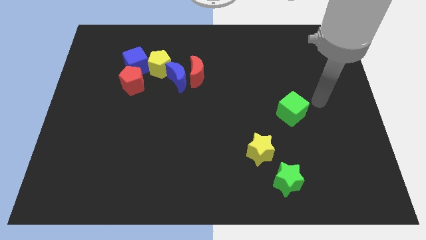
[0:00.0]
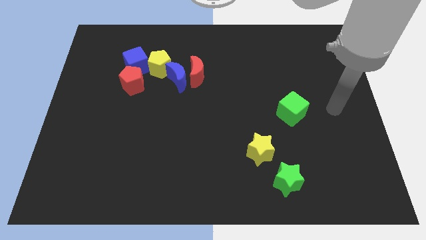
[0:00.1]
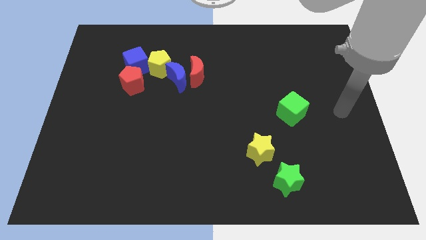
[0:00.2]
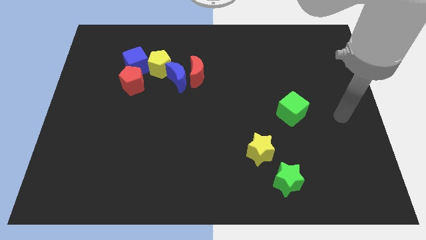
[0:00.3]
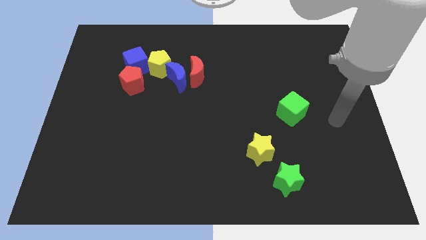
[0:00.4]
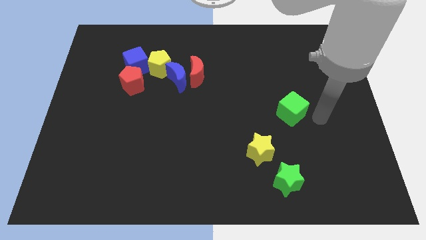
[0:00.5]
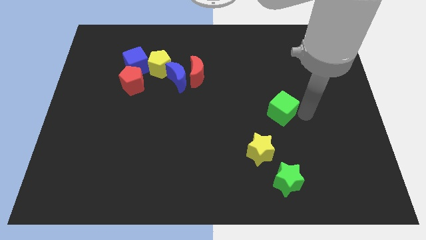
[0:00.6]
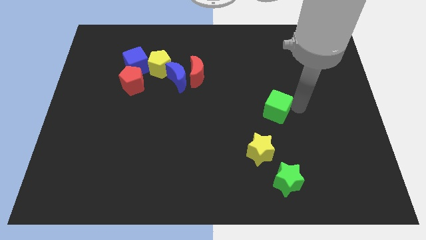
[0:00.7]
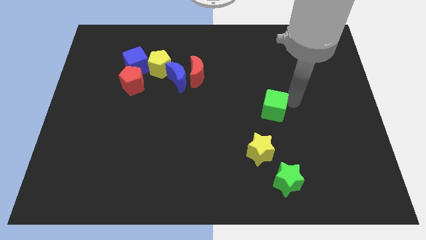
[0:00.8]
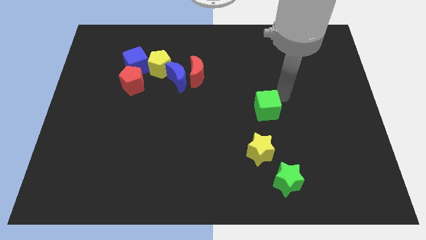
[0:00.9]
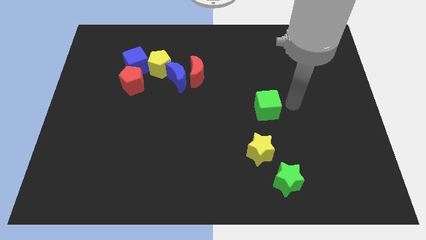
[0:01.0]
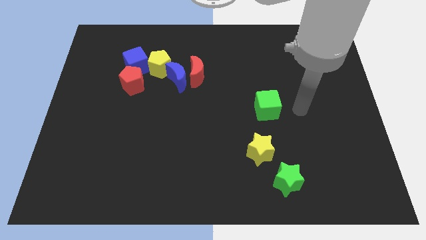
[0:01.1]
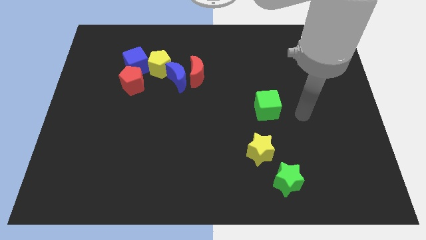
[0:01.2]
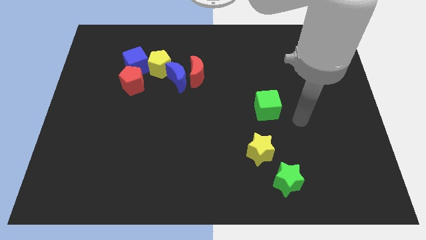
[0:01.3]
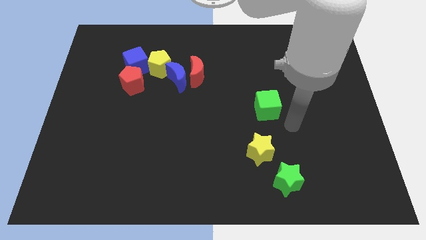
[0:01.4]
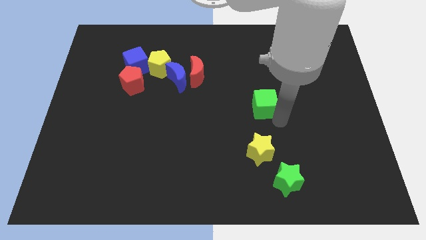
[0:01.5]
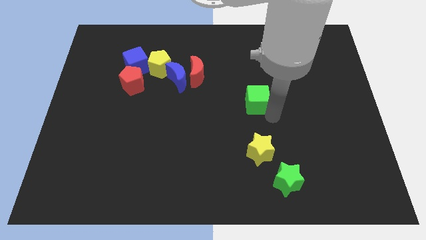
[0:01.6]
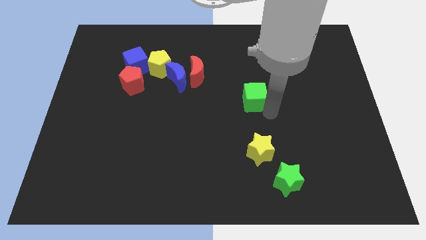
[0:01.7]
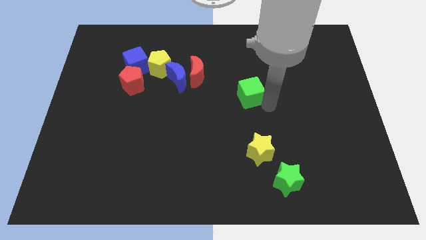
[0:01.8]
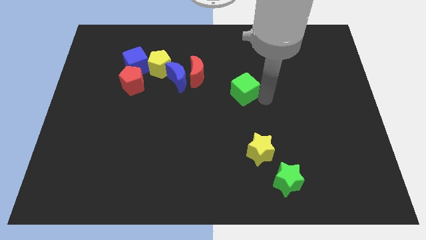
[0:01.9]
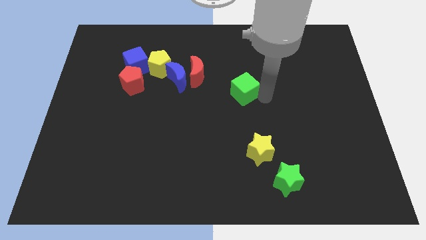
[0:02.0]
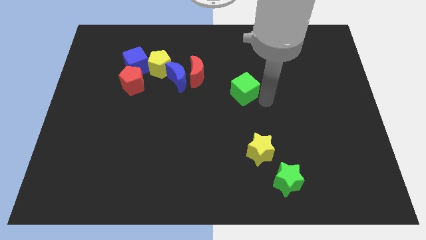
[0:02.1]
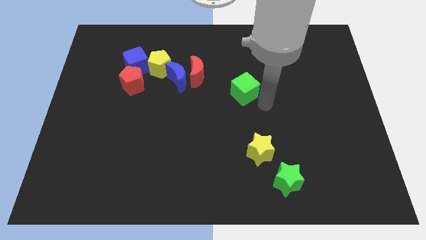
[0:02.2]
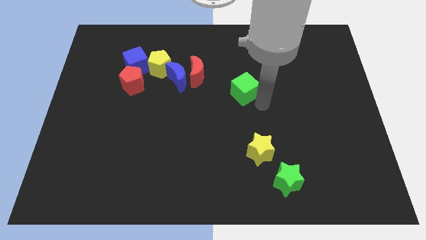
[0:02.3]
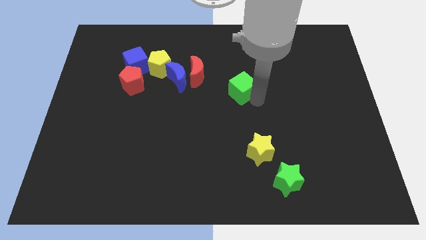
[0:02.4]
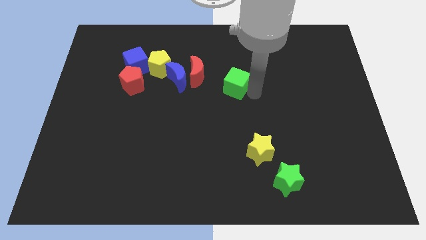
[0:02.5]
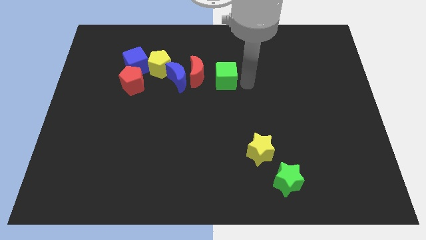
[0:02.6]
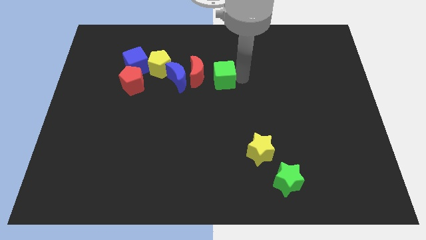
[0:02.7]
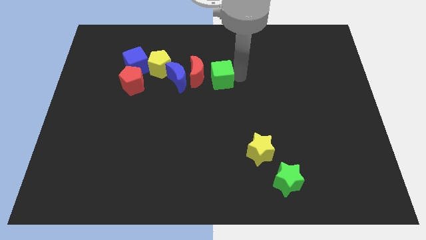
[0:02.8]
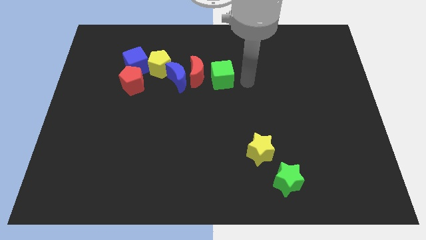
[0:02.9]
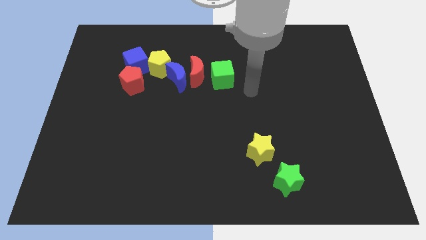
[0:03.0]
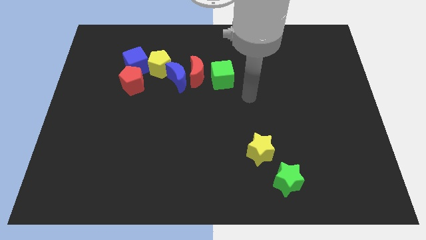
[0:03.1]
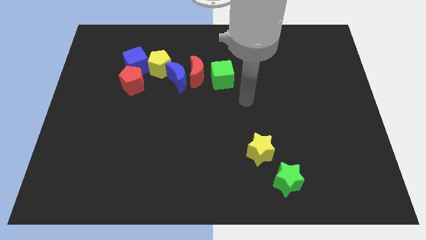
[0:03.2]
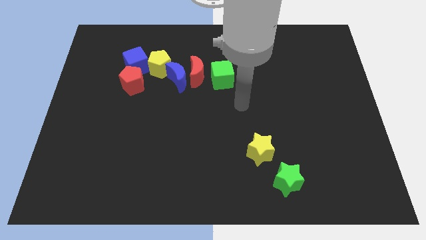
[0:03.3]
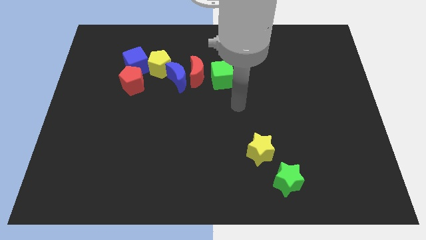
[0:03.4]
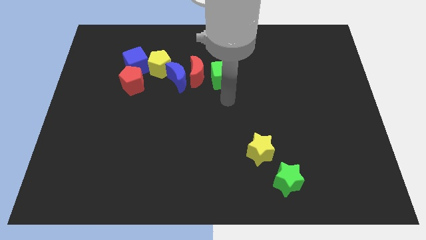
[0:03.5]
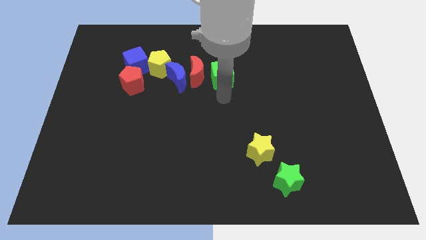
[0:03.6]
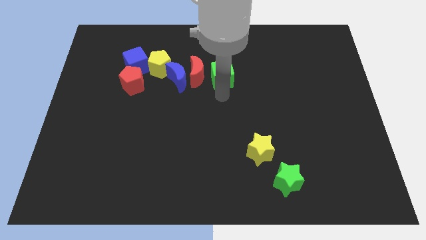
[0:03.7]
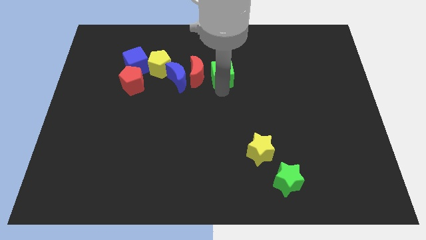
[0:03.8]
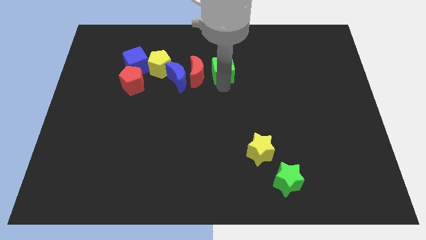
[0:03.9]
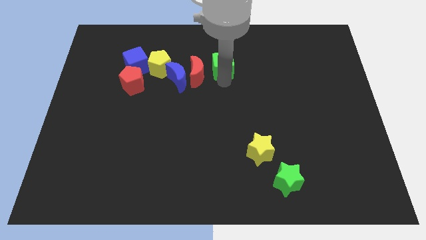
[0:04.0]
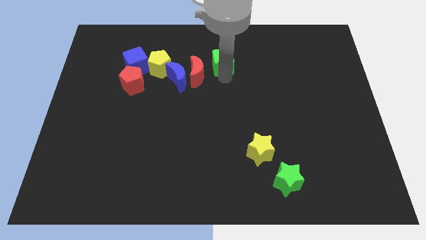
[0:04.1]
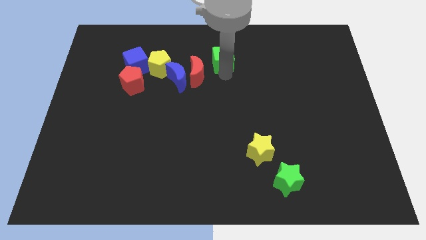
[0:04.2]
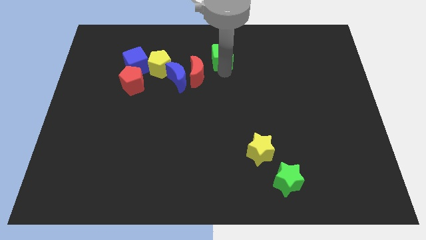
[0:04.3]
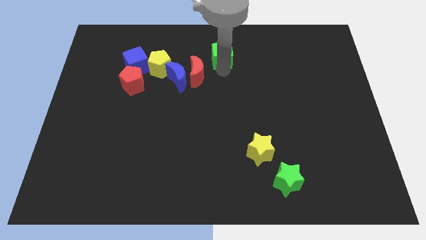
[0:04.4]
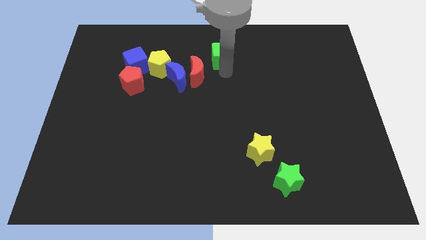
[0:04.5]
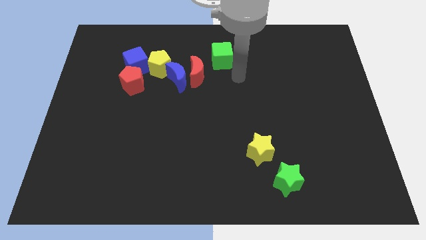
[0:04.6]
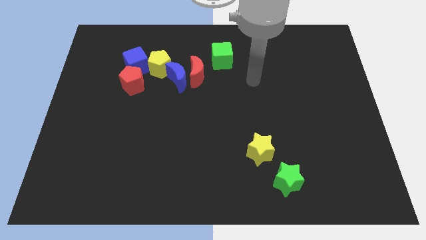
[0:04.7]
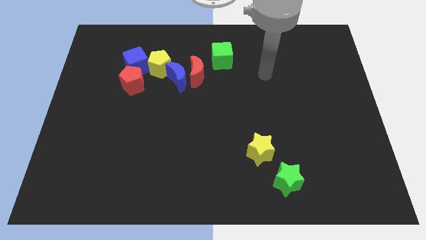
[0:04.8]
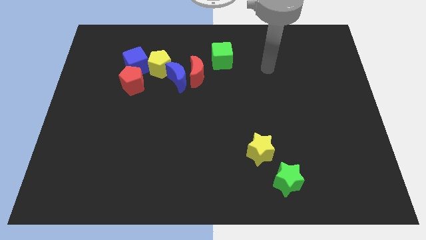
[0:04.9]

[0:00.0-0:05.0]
move the green cube to the top middle of the board

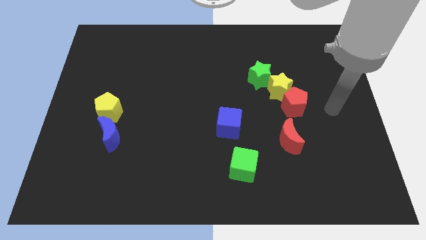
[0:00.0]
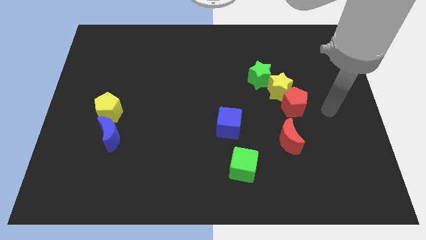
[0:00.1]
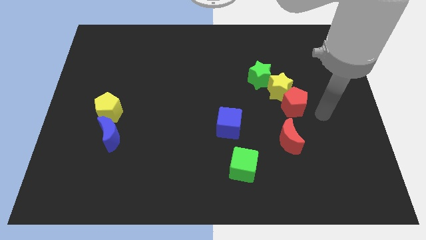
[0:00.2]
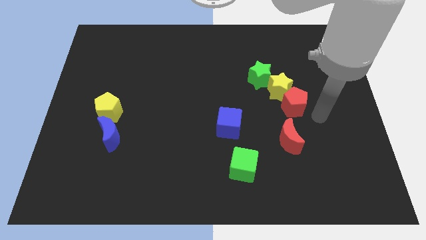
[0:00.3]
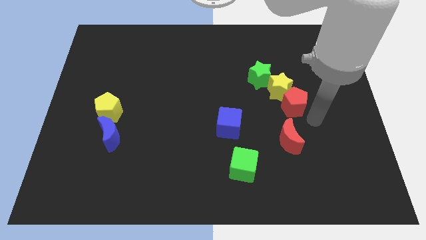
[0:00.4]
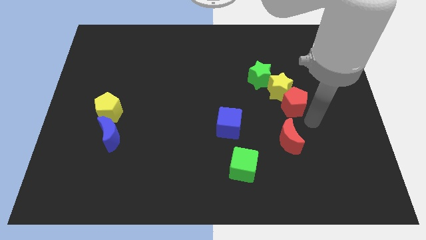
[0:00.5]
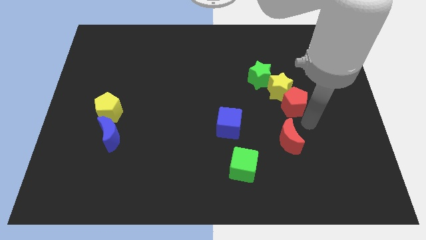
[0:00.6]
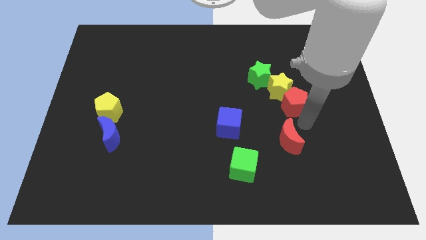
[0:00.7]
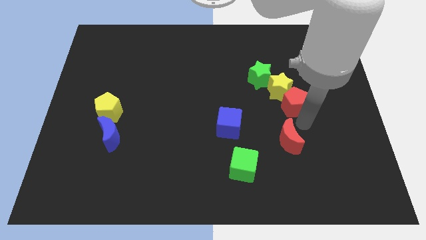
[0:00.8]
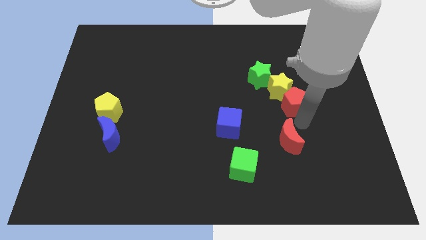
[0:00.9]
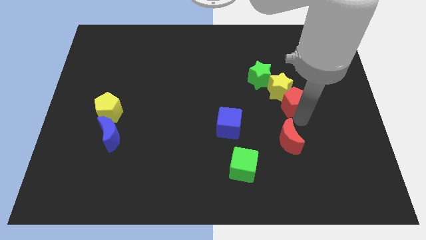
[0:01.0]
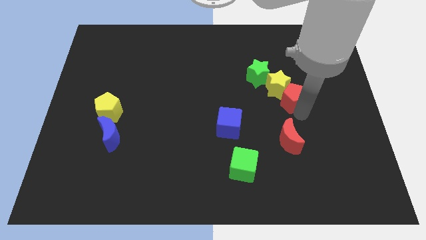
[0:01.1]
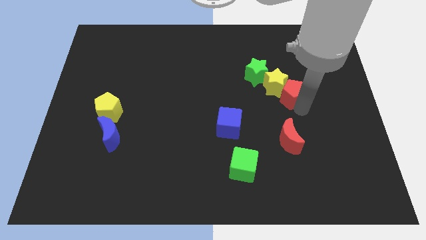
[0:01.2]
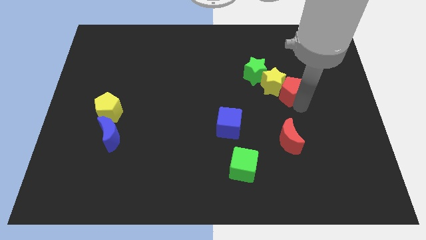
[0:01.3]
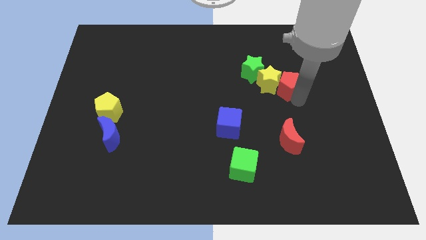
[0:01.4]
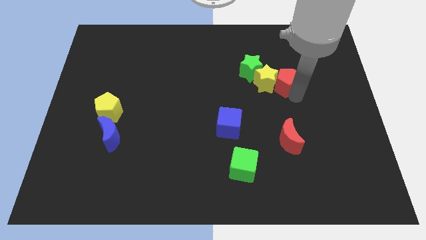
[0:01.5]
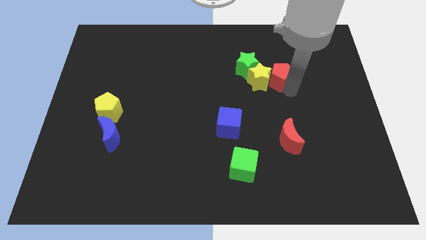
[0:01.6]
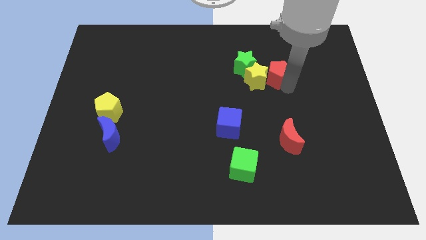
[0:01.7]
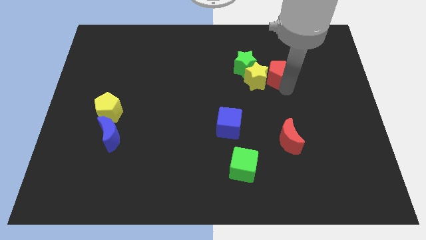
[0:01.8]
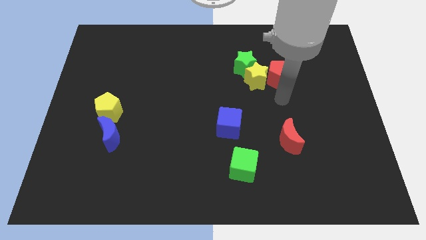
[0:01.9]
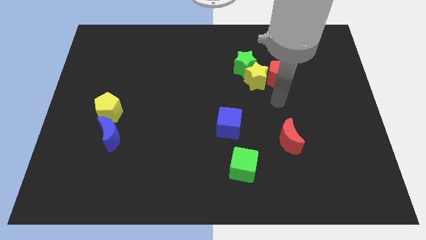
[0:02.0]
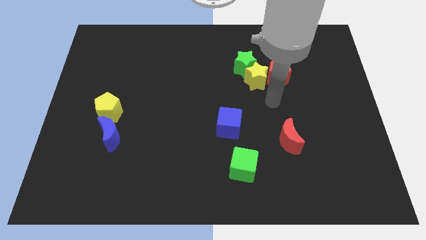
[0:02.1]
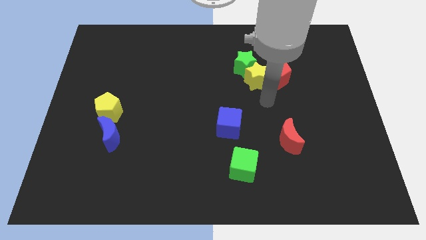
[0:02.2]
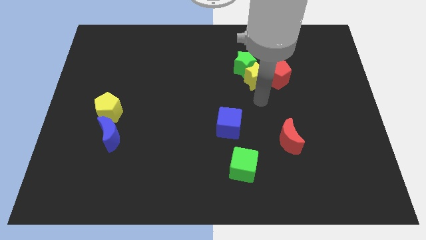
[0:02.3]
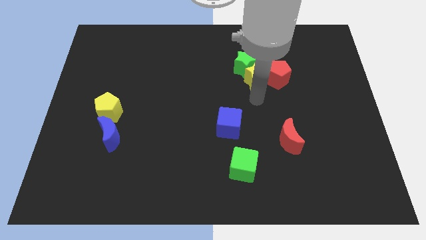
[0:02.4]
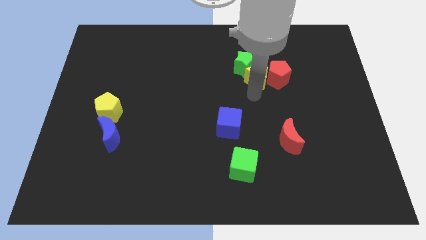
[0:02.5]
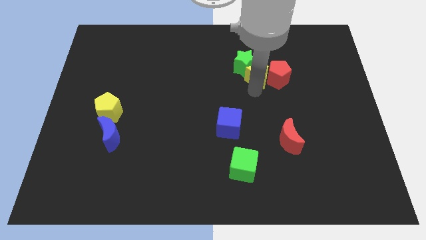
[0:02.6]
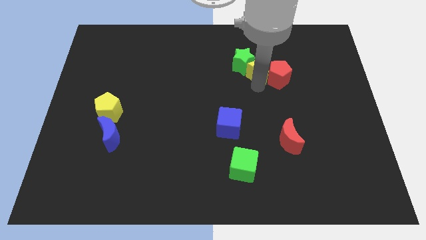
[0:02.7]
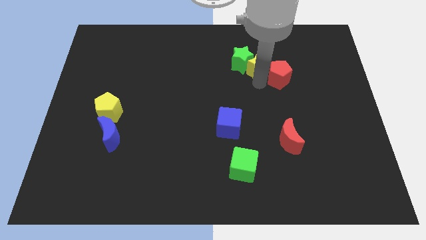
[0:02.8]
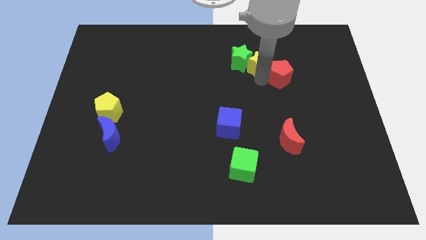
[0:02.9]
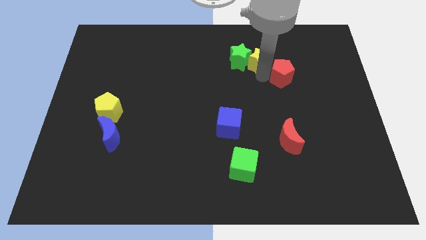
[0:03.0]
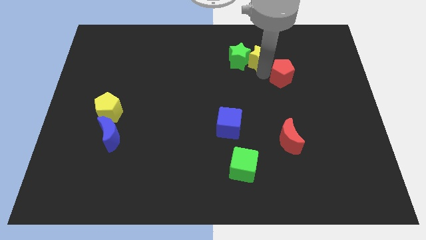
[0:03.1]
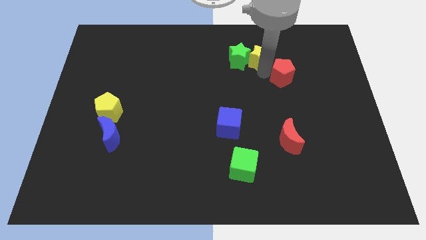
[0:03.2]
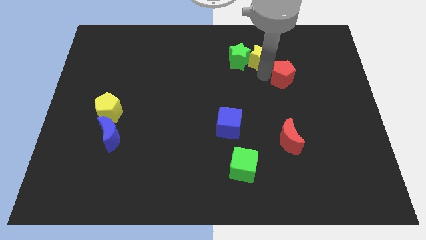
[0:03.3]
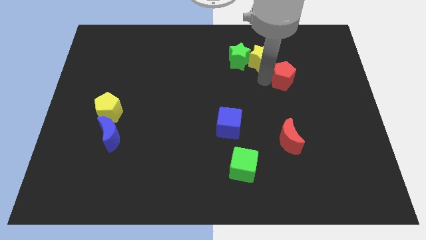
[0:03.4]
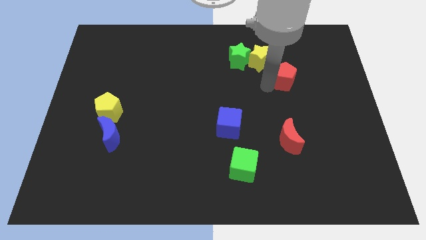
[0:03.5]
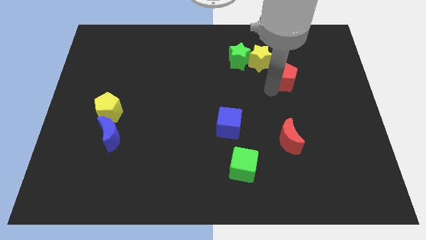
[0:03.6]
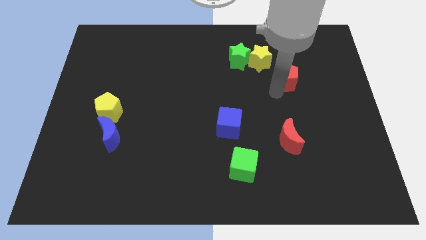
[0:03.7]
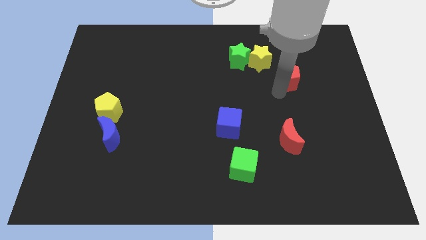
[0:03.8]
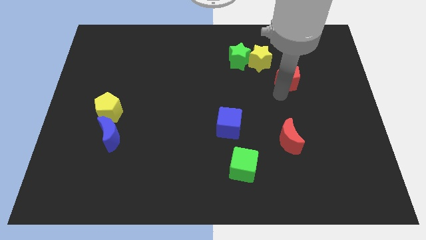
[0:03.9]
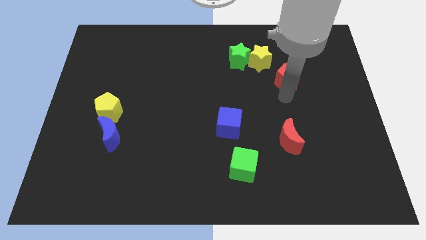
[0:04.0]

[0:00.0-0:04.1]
move the yellow star right to the green star
